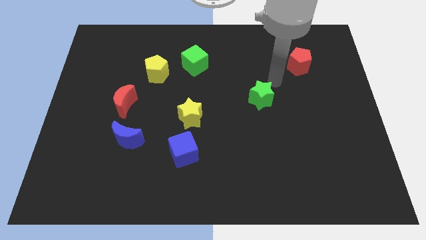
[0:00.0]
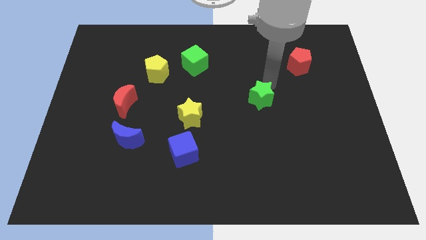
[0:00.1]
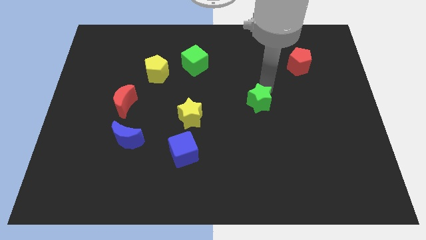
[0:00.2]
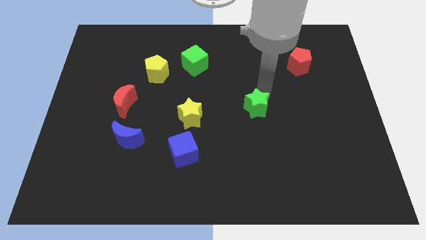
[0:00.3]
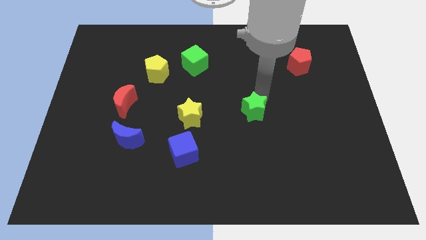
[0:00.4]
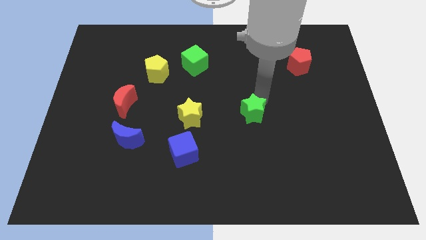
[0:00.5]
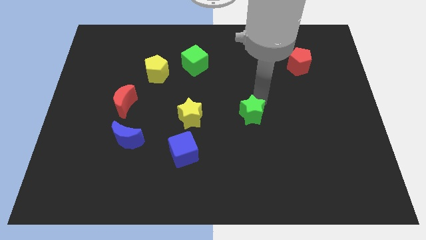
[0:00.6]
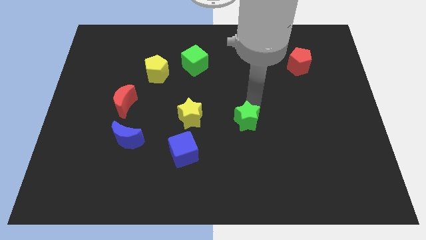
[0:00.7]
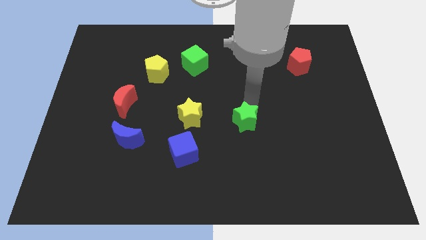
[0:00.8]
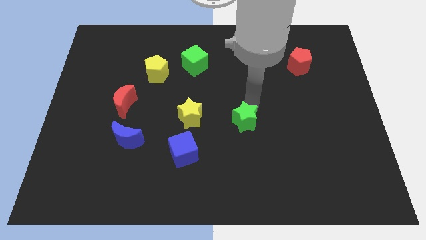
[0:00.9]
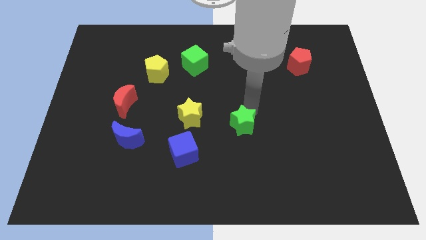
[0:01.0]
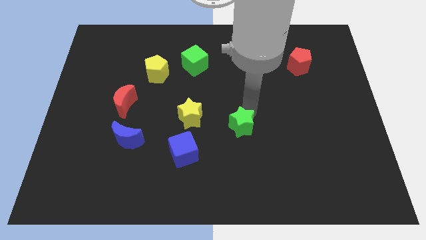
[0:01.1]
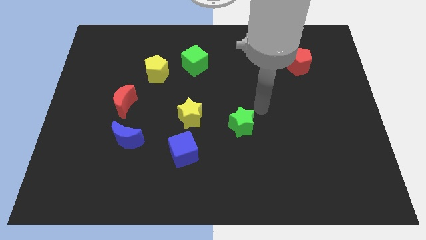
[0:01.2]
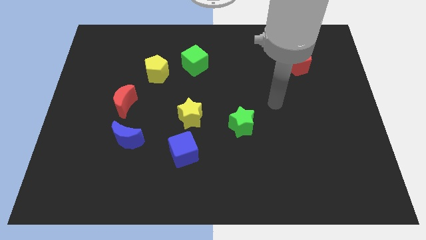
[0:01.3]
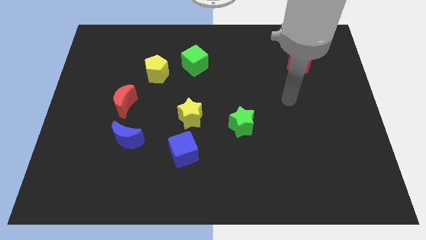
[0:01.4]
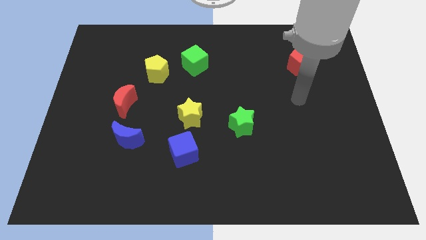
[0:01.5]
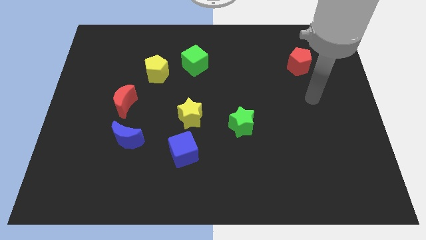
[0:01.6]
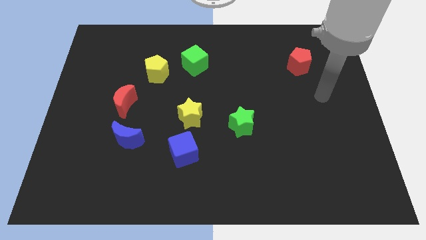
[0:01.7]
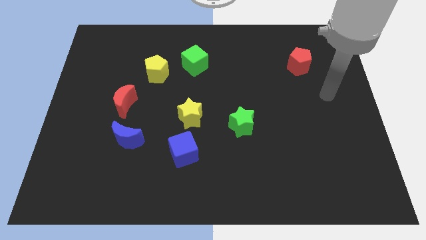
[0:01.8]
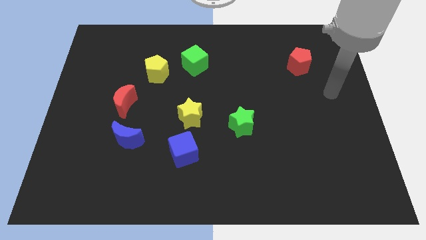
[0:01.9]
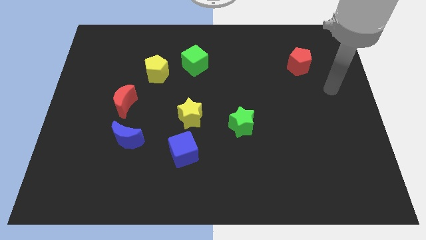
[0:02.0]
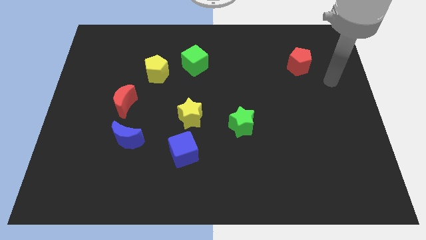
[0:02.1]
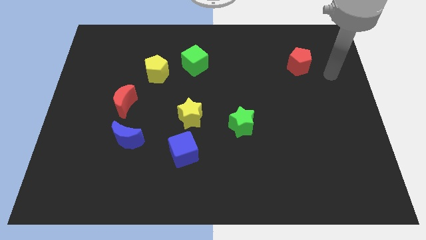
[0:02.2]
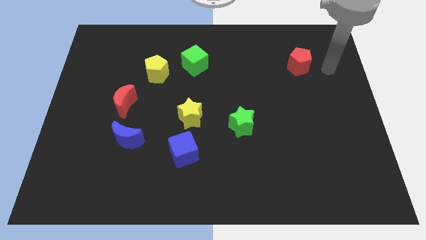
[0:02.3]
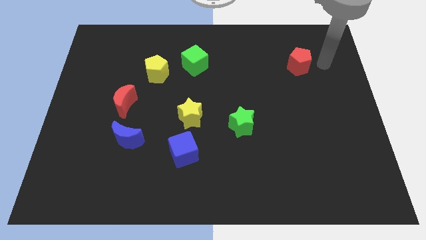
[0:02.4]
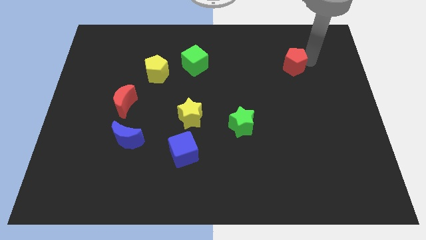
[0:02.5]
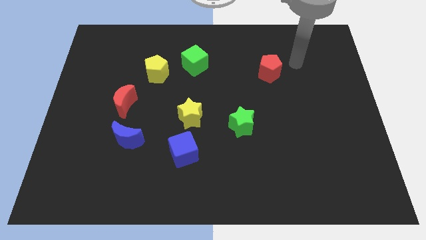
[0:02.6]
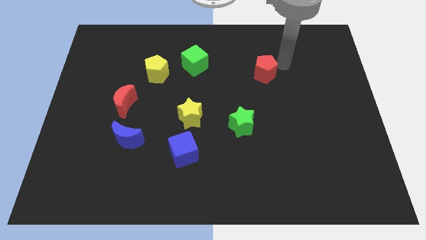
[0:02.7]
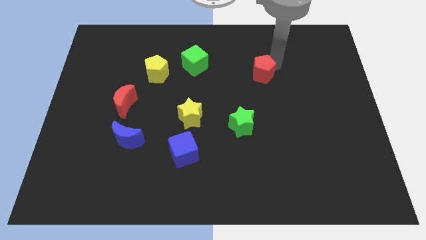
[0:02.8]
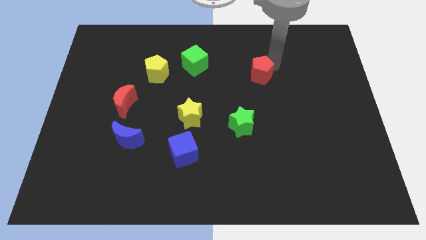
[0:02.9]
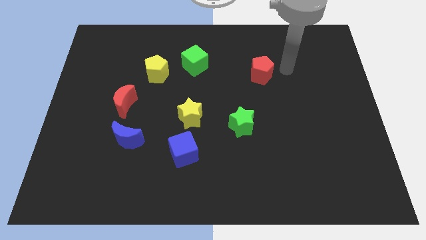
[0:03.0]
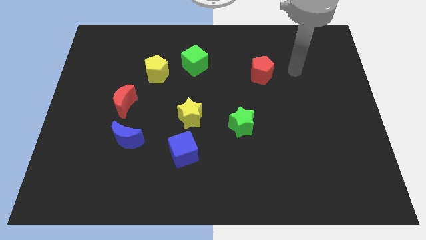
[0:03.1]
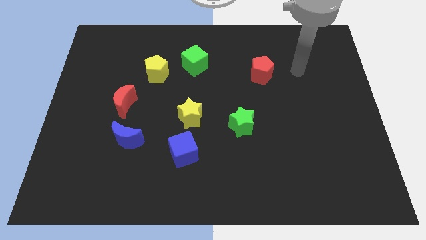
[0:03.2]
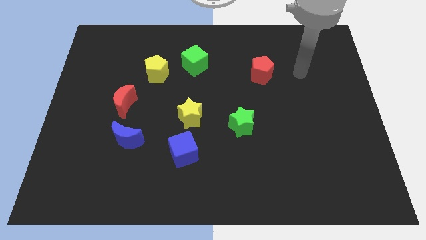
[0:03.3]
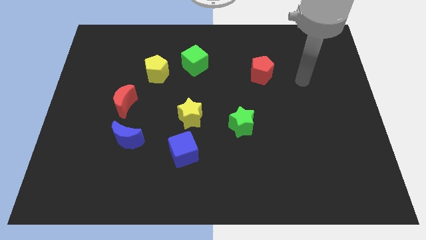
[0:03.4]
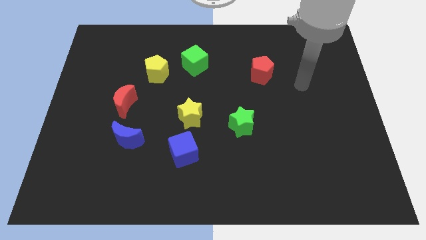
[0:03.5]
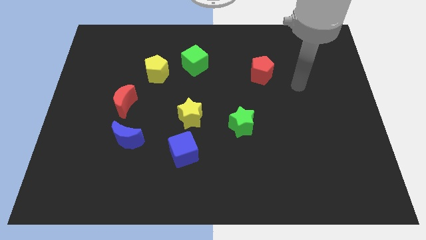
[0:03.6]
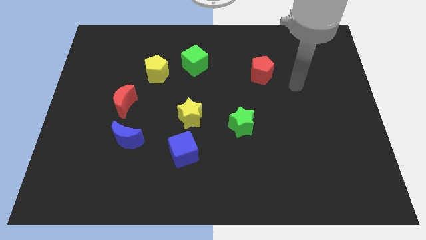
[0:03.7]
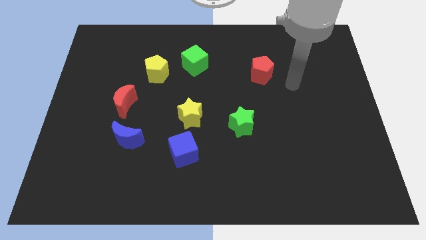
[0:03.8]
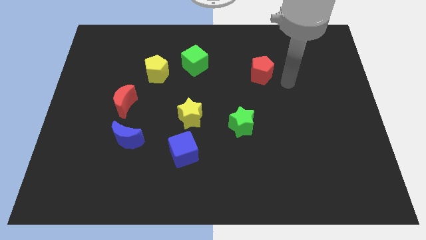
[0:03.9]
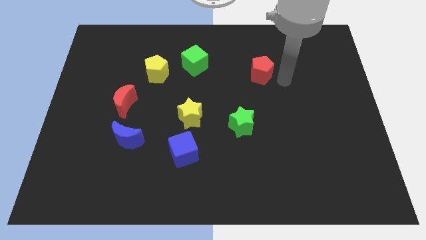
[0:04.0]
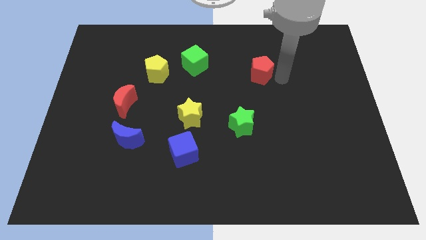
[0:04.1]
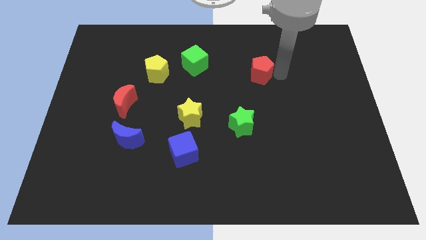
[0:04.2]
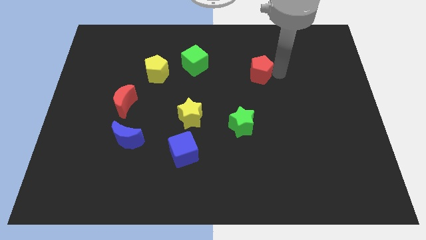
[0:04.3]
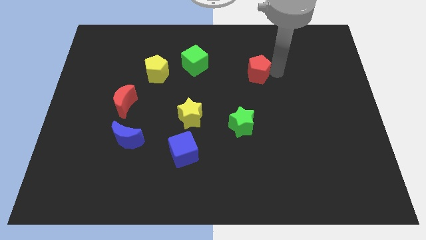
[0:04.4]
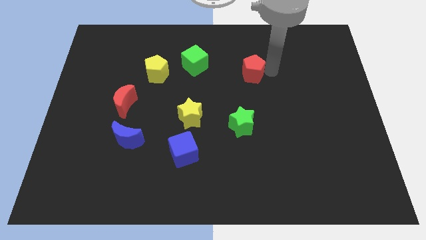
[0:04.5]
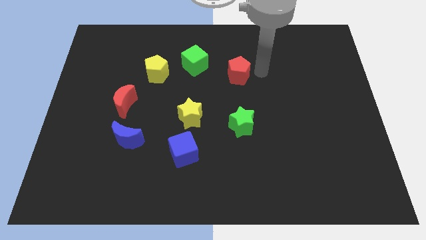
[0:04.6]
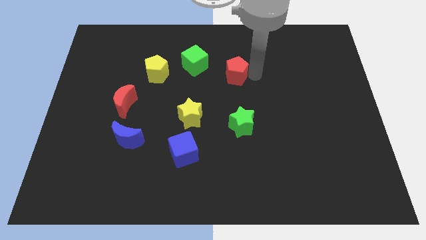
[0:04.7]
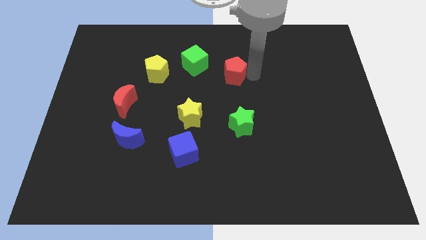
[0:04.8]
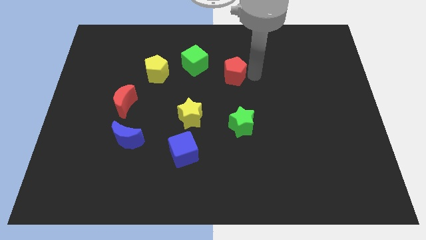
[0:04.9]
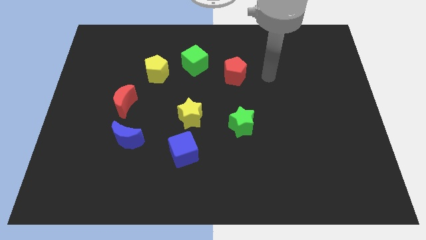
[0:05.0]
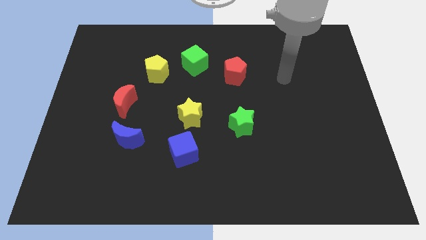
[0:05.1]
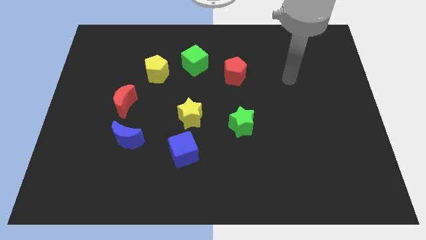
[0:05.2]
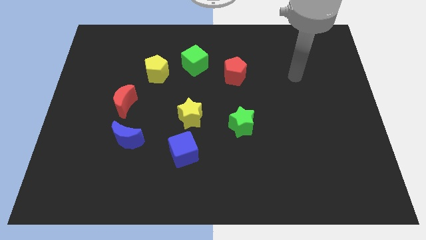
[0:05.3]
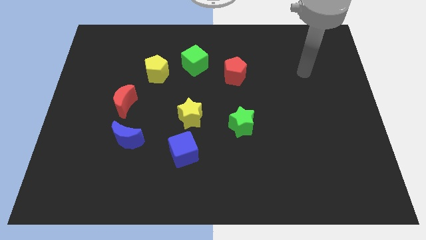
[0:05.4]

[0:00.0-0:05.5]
place the red pentagon to the top side of the green star

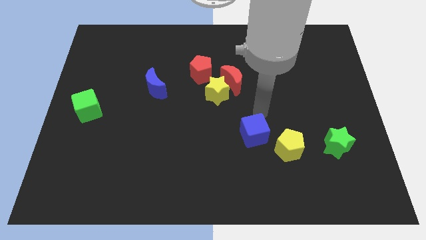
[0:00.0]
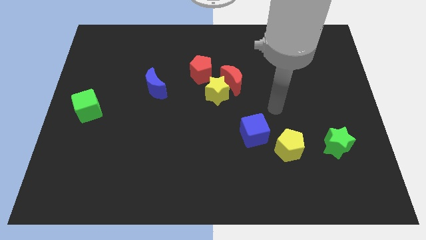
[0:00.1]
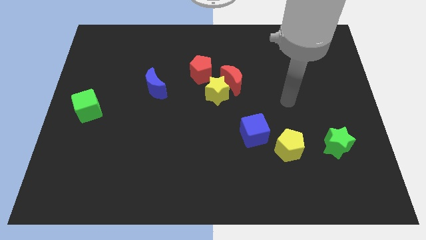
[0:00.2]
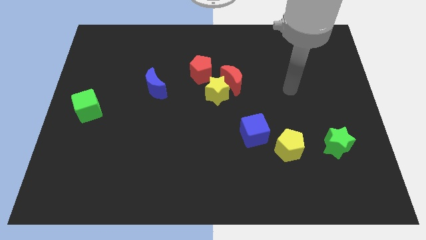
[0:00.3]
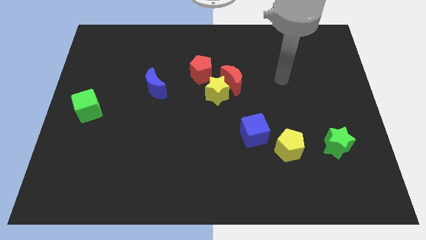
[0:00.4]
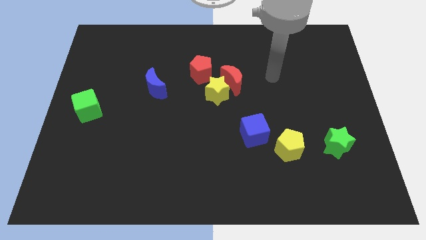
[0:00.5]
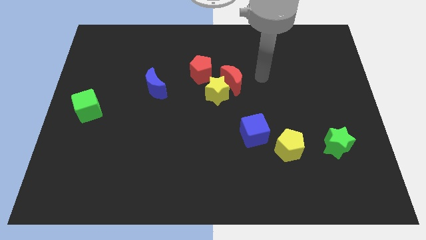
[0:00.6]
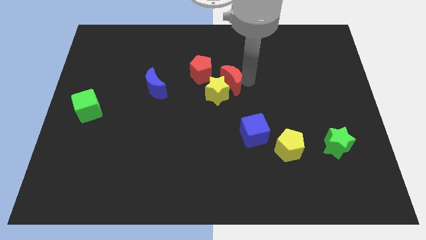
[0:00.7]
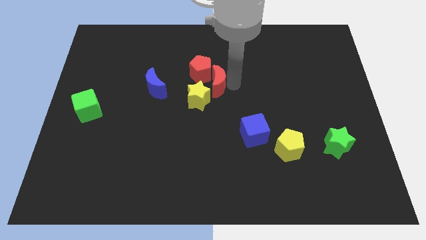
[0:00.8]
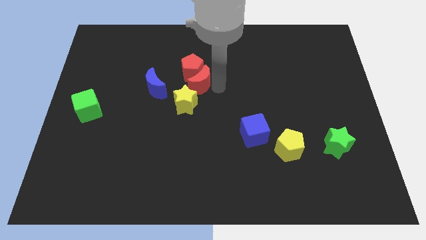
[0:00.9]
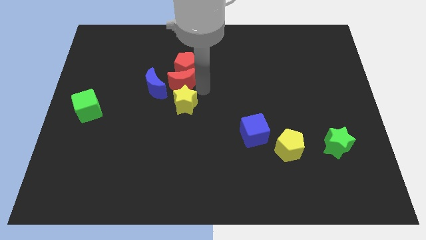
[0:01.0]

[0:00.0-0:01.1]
move red moon in between red pentagon and yellow star

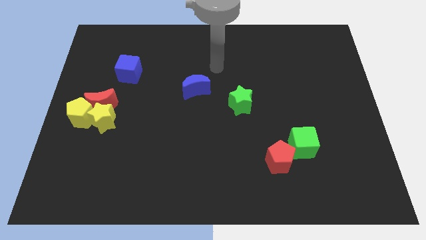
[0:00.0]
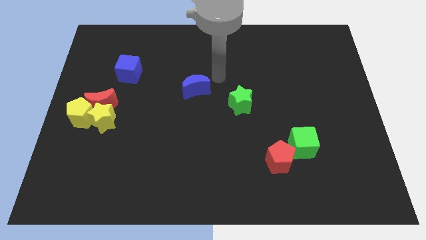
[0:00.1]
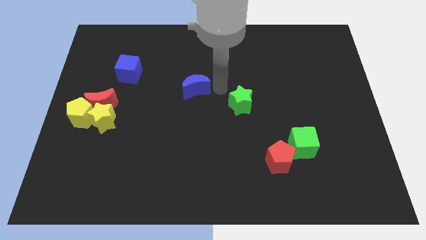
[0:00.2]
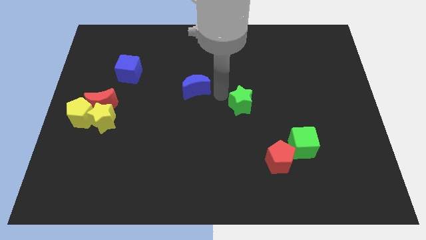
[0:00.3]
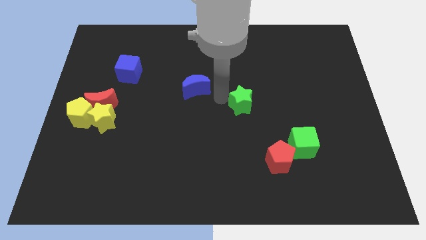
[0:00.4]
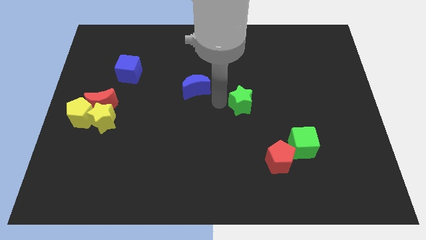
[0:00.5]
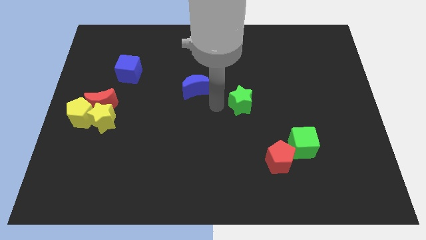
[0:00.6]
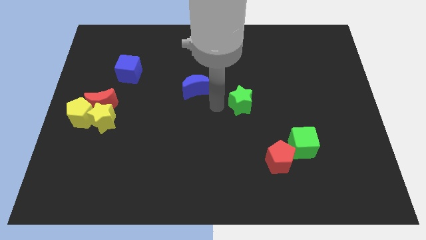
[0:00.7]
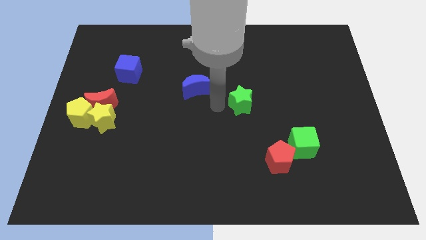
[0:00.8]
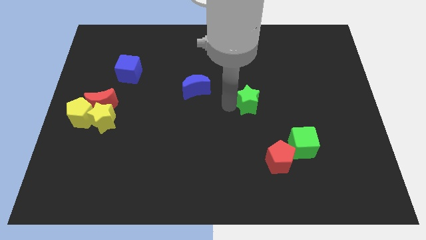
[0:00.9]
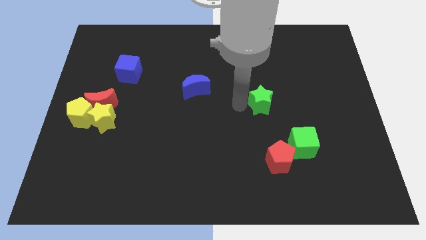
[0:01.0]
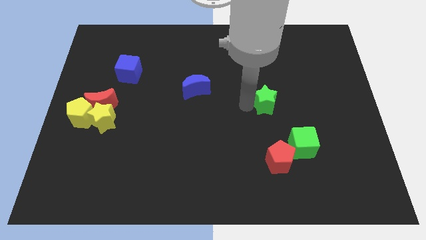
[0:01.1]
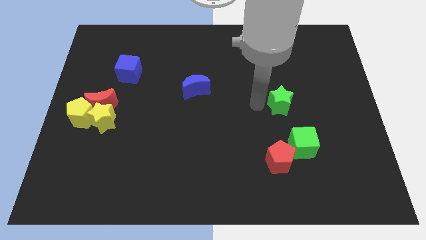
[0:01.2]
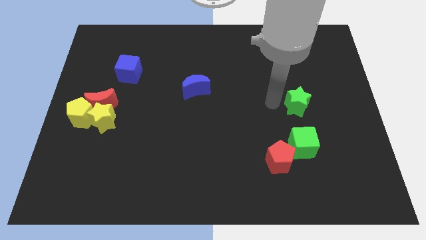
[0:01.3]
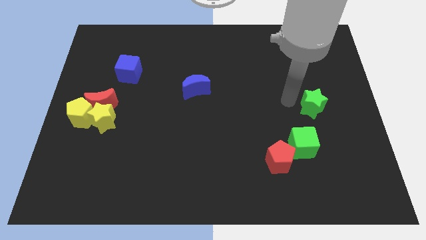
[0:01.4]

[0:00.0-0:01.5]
move the green star slightly to the right side of the board

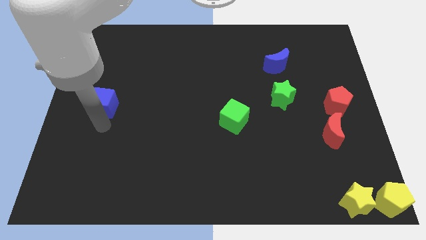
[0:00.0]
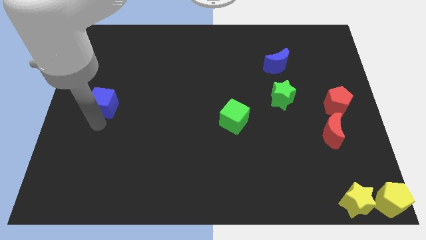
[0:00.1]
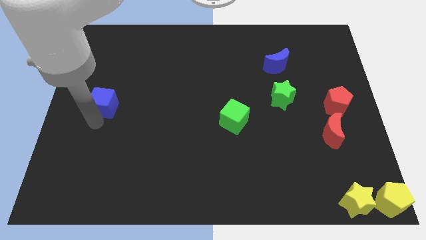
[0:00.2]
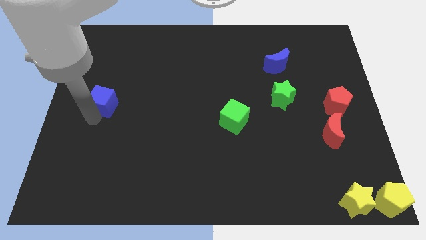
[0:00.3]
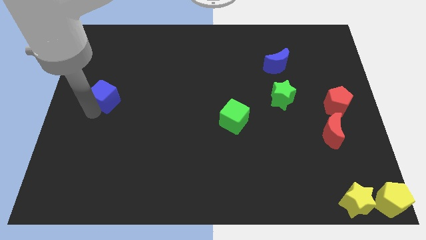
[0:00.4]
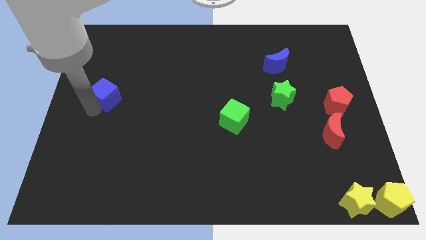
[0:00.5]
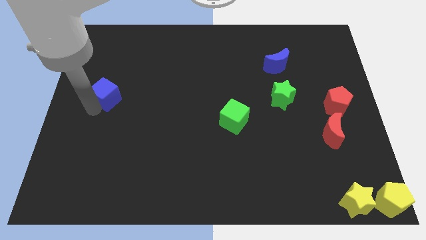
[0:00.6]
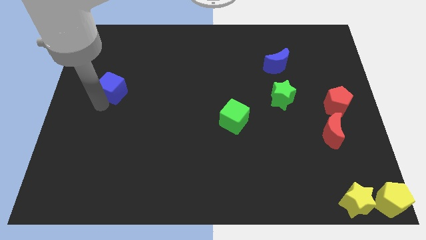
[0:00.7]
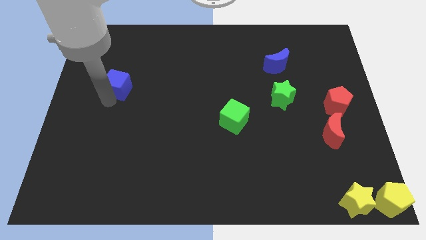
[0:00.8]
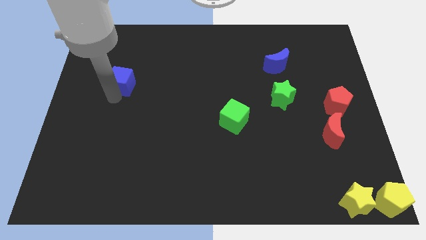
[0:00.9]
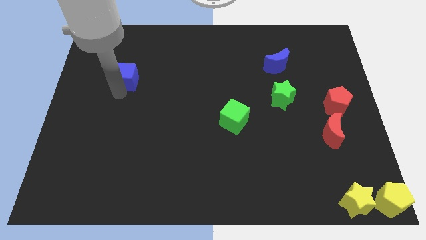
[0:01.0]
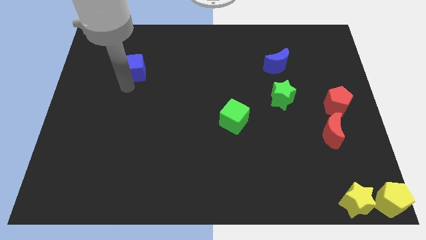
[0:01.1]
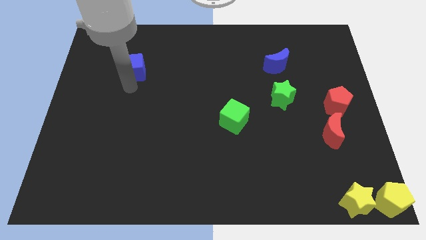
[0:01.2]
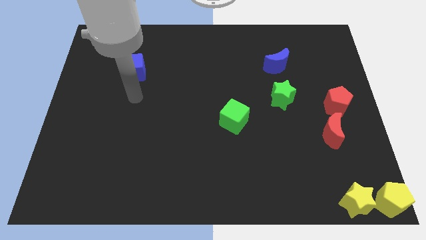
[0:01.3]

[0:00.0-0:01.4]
push the blue cube to the left of the blue crescent
